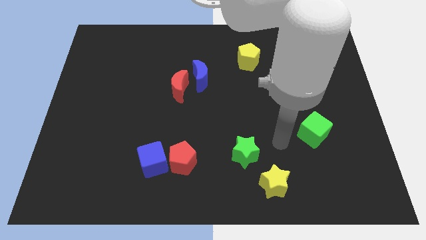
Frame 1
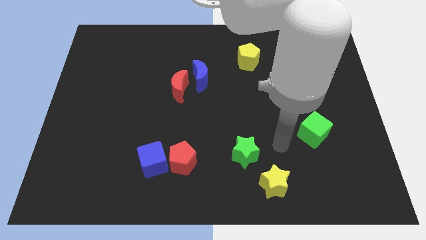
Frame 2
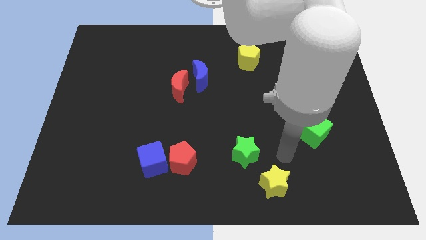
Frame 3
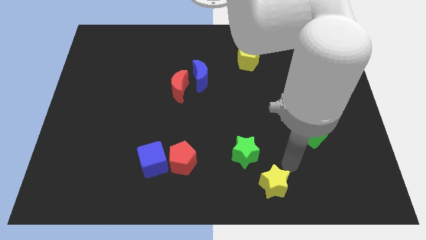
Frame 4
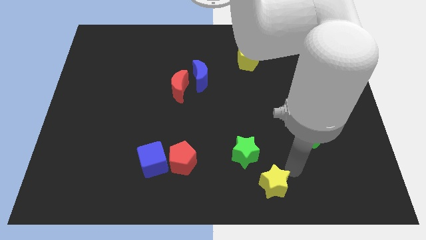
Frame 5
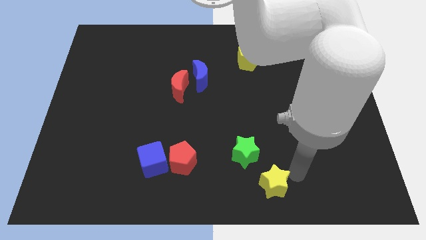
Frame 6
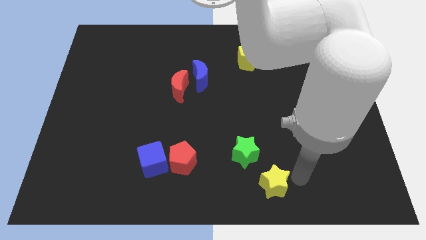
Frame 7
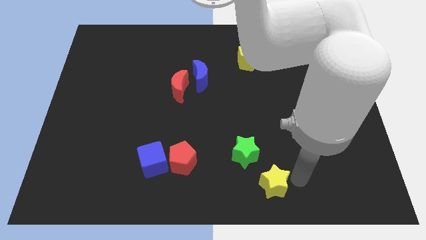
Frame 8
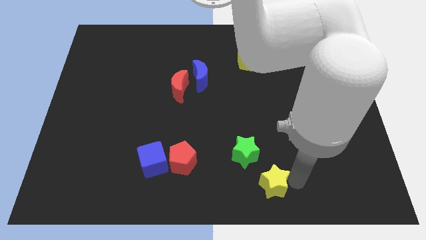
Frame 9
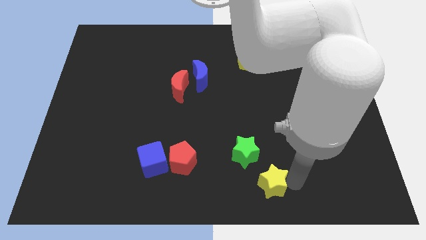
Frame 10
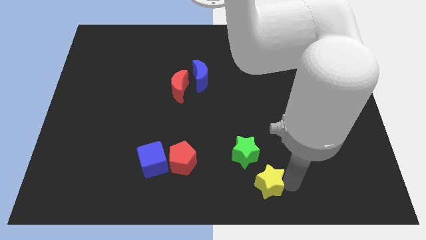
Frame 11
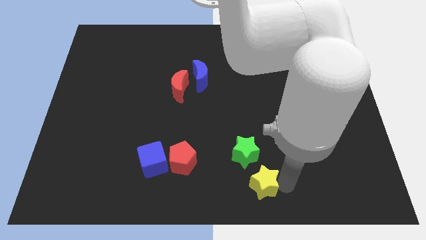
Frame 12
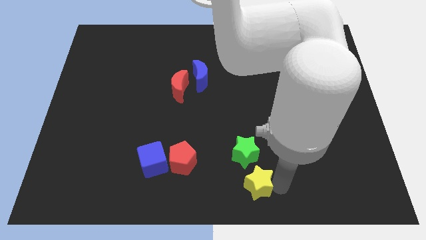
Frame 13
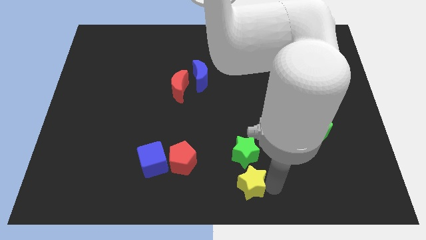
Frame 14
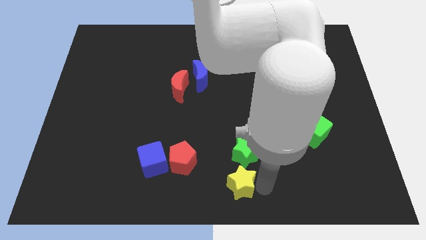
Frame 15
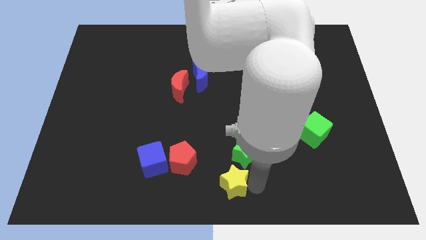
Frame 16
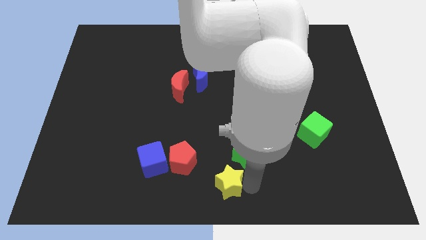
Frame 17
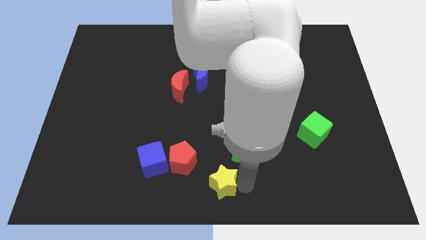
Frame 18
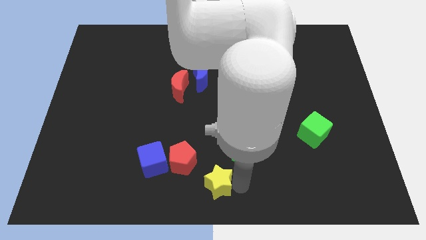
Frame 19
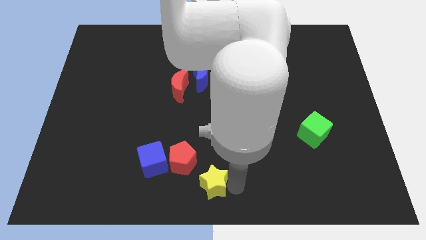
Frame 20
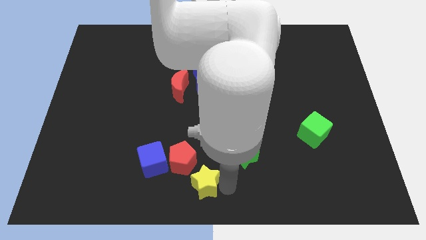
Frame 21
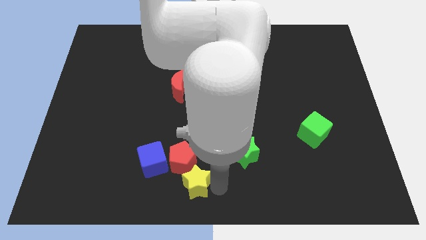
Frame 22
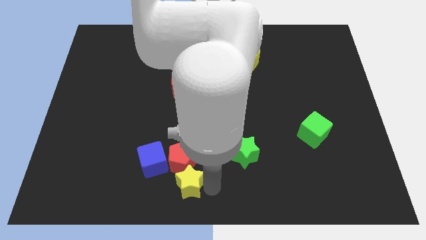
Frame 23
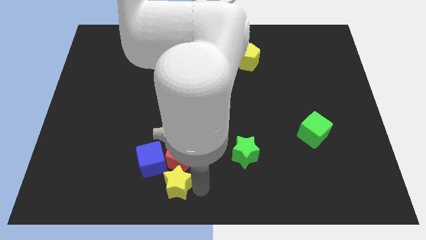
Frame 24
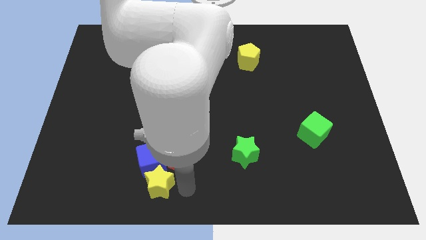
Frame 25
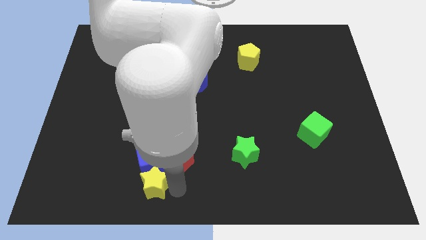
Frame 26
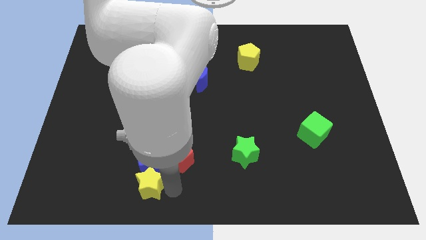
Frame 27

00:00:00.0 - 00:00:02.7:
move the yellow star towards the blue cube

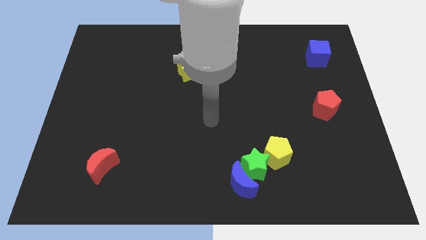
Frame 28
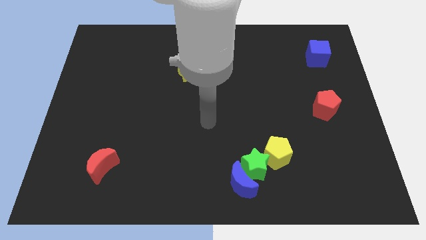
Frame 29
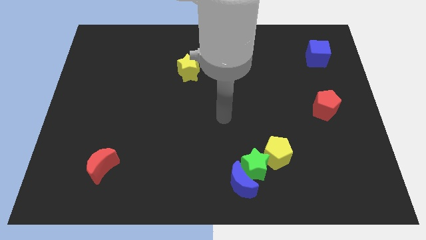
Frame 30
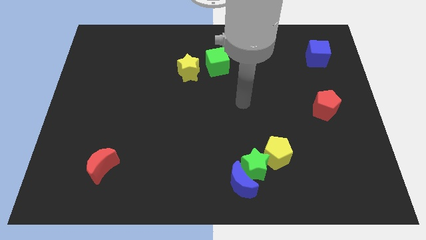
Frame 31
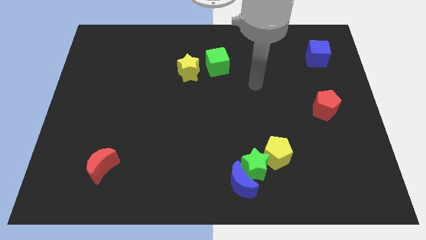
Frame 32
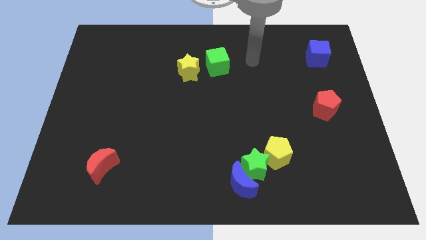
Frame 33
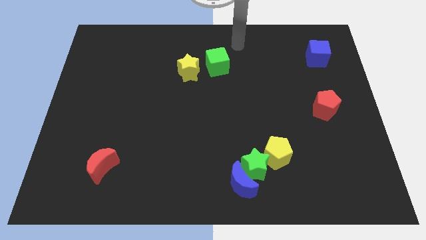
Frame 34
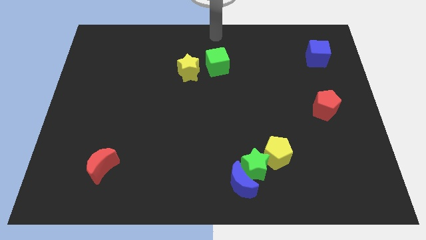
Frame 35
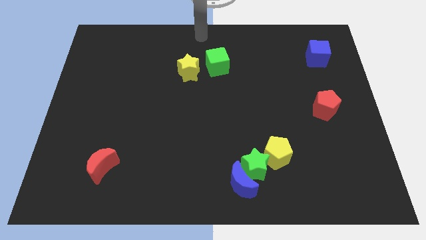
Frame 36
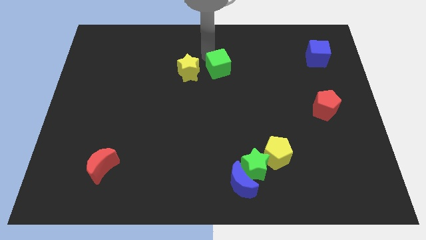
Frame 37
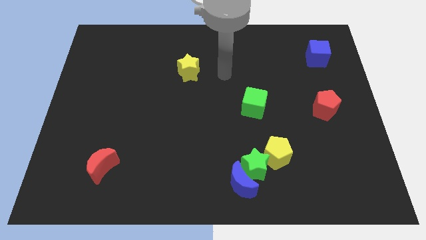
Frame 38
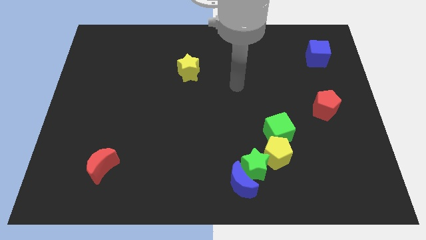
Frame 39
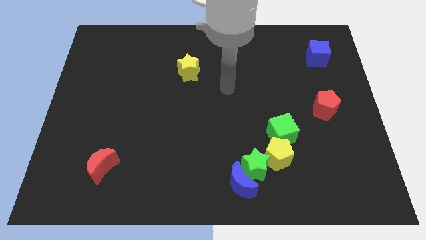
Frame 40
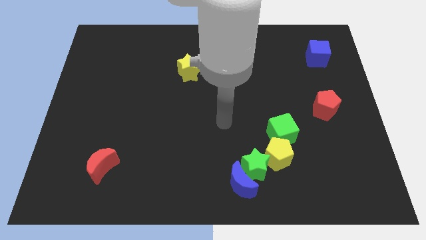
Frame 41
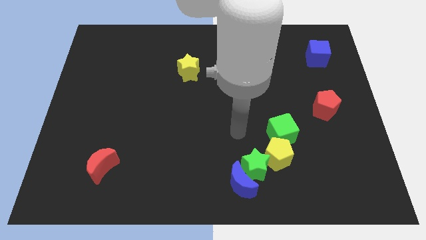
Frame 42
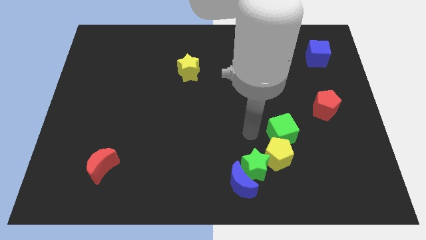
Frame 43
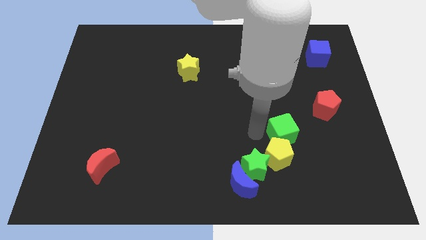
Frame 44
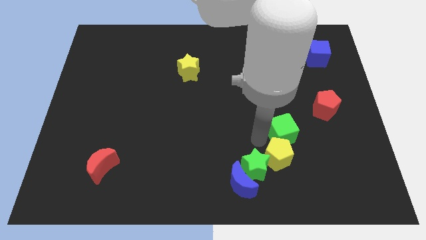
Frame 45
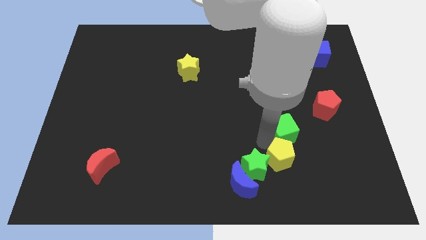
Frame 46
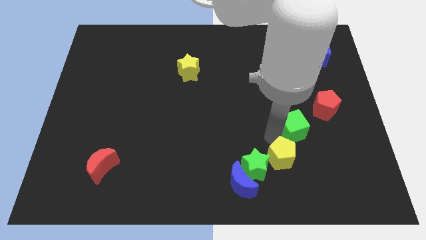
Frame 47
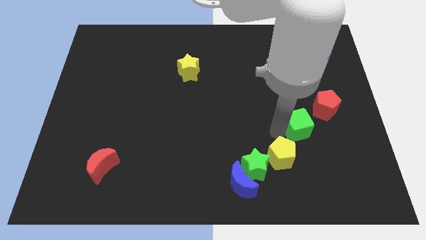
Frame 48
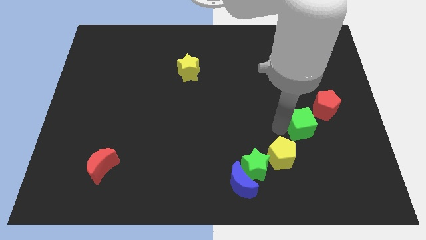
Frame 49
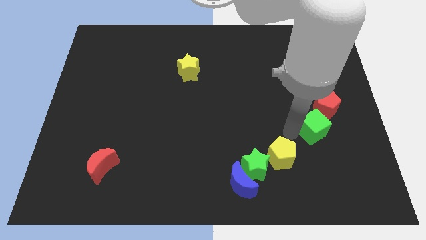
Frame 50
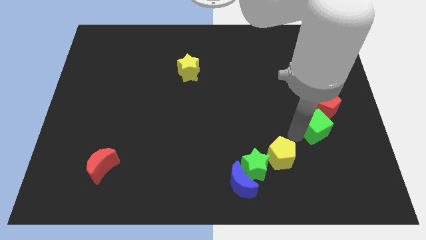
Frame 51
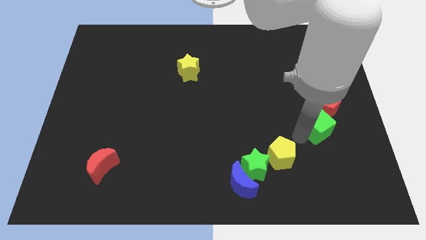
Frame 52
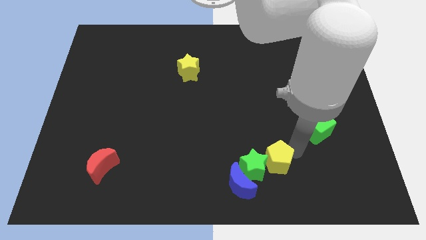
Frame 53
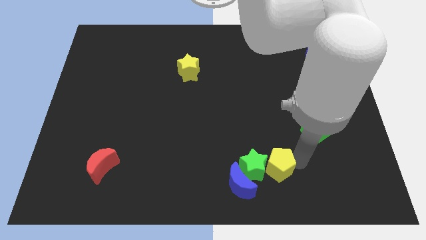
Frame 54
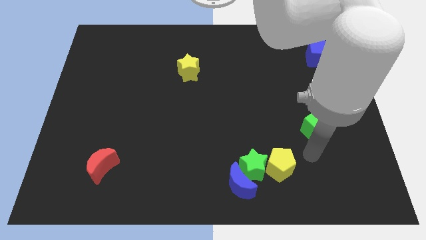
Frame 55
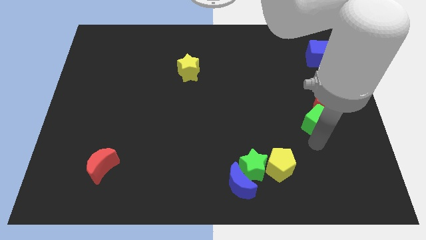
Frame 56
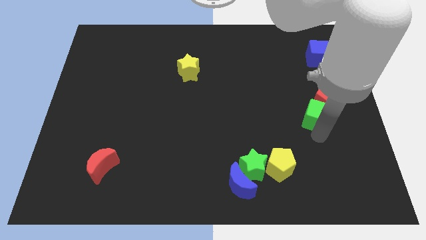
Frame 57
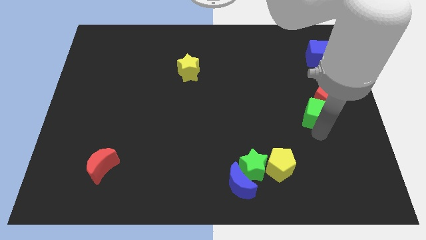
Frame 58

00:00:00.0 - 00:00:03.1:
slide the green cube close to the red pentagon

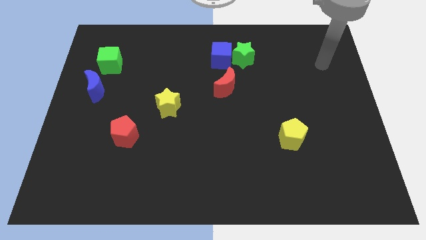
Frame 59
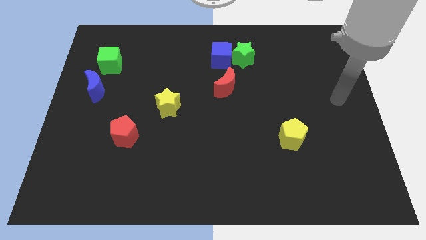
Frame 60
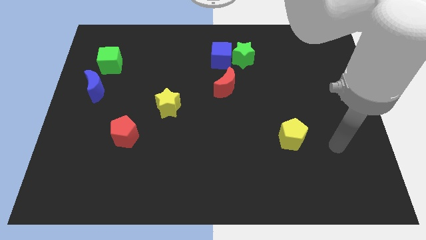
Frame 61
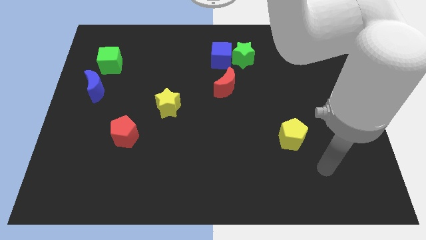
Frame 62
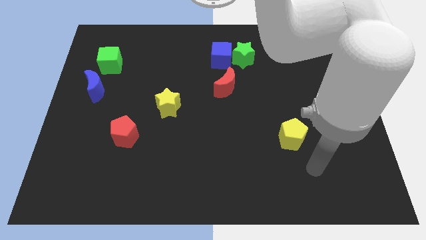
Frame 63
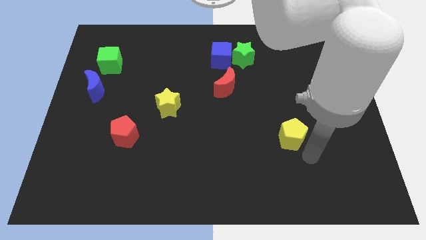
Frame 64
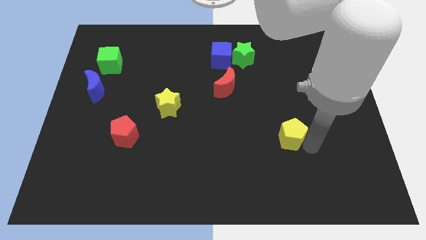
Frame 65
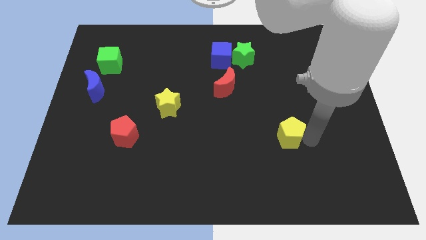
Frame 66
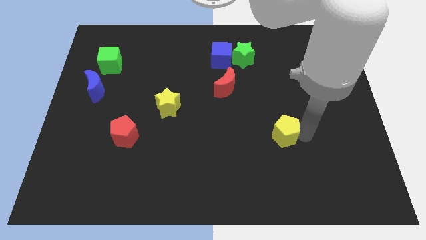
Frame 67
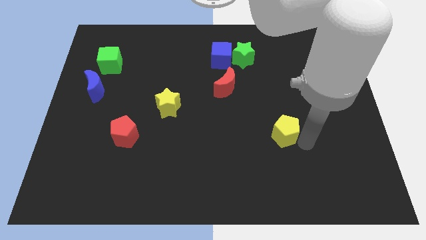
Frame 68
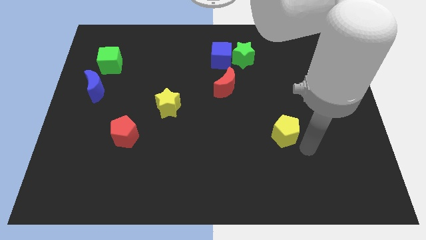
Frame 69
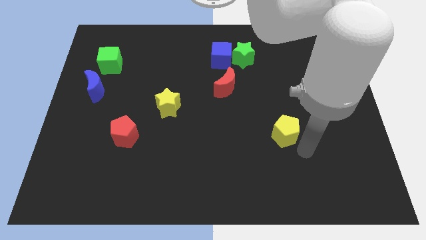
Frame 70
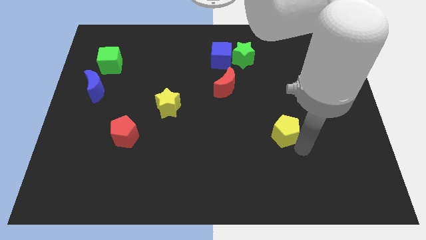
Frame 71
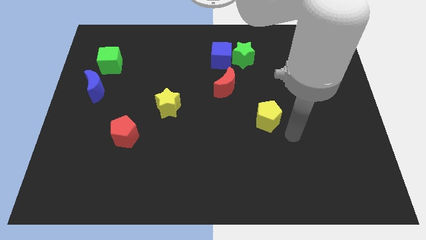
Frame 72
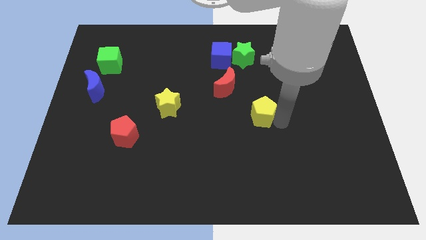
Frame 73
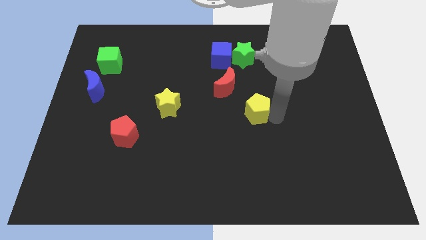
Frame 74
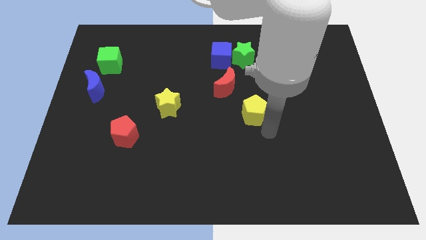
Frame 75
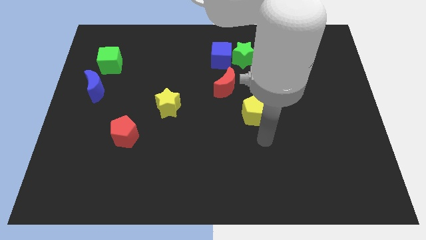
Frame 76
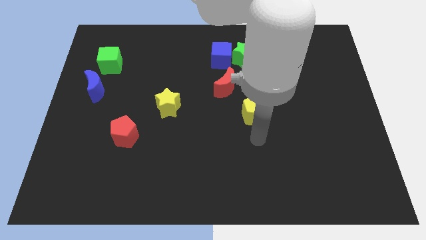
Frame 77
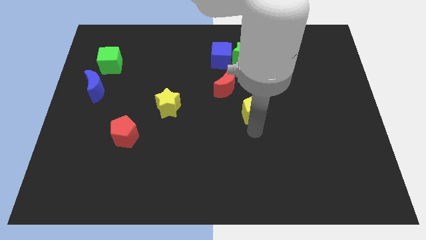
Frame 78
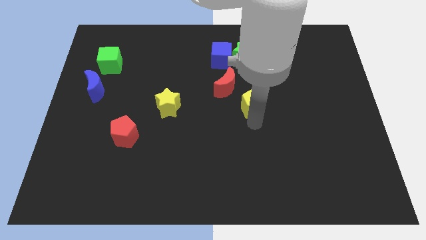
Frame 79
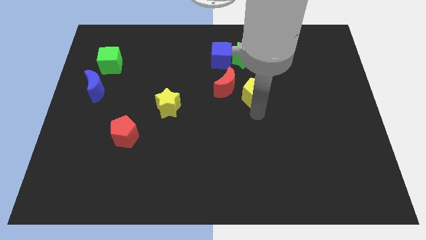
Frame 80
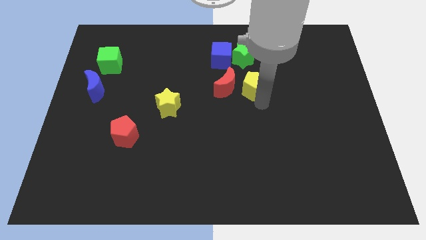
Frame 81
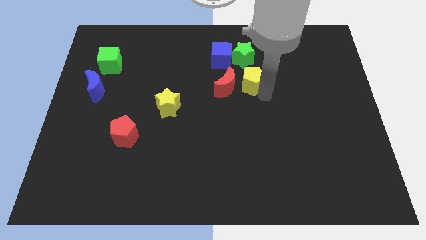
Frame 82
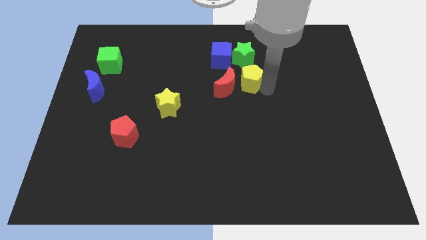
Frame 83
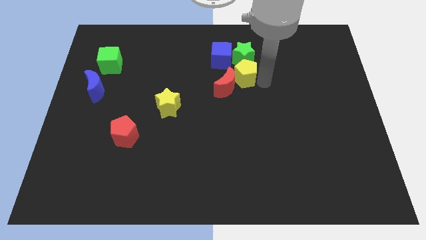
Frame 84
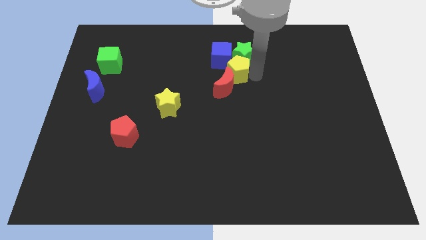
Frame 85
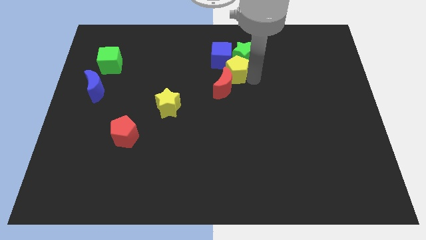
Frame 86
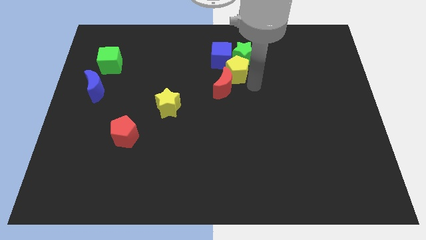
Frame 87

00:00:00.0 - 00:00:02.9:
move the yellow pentagon next to the green star
